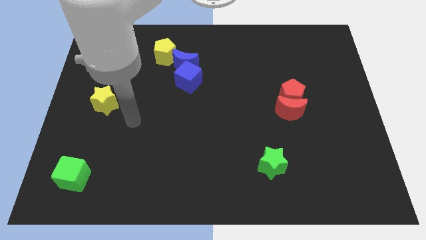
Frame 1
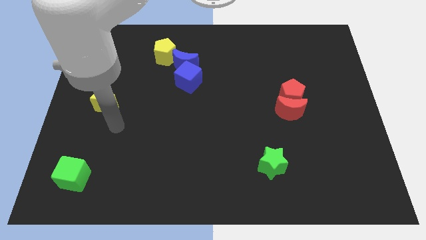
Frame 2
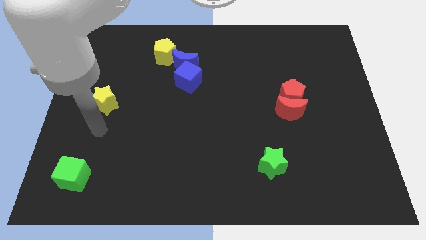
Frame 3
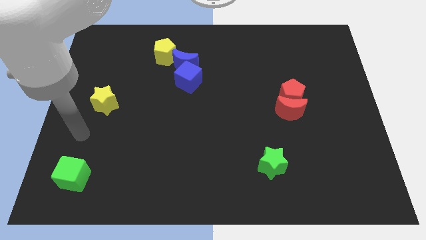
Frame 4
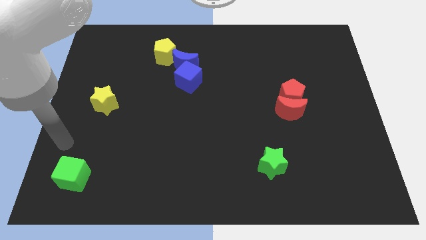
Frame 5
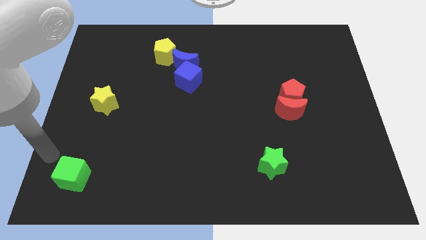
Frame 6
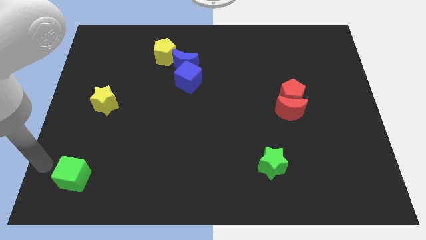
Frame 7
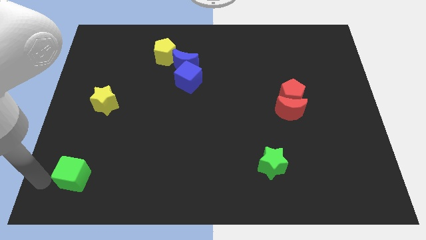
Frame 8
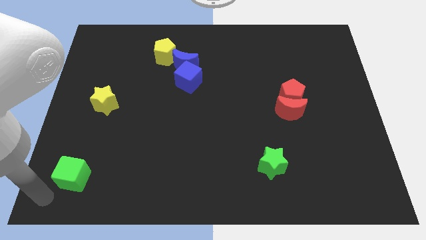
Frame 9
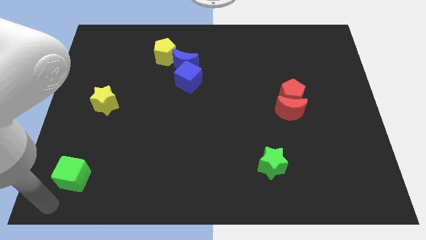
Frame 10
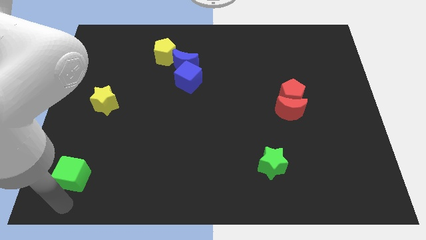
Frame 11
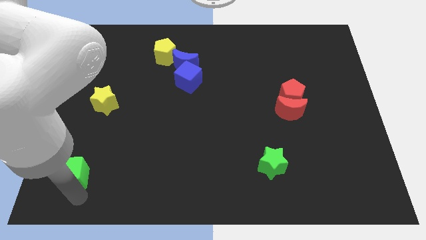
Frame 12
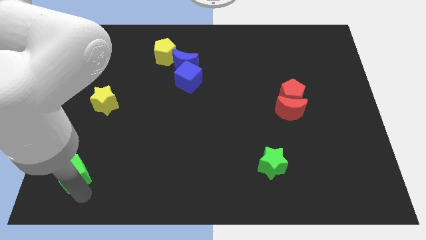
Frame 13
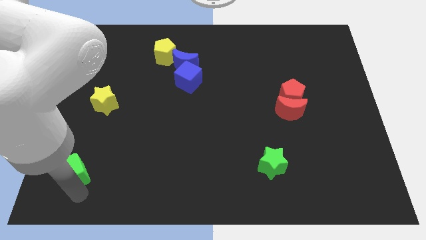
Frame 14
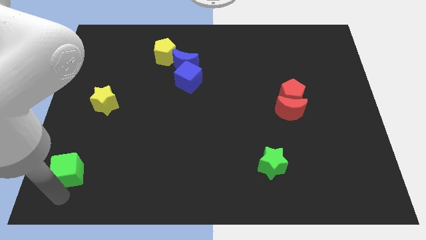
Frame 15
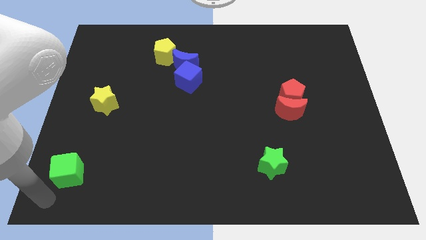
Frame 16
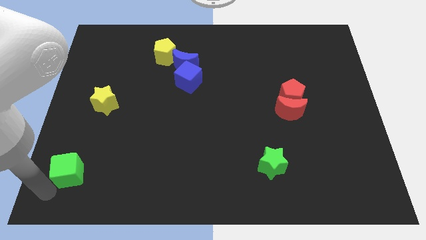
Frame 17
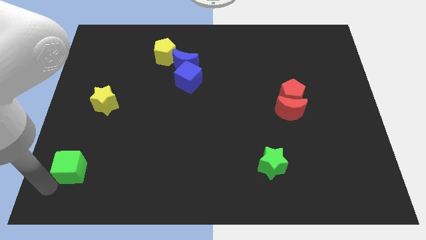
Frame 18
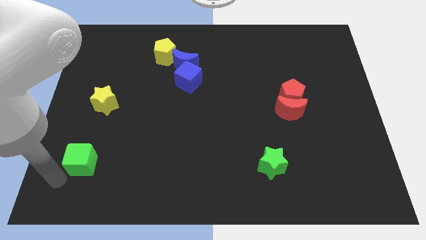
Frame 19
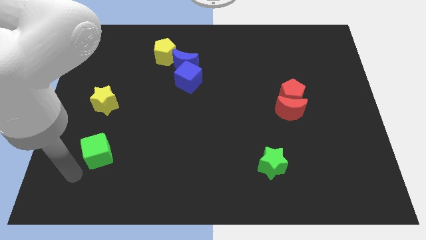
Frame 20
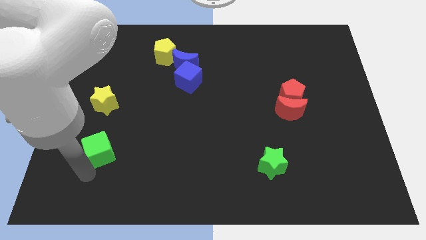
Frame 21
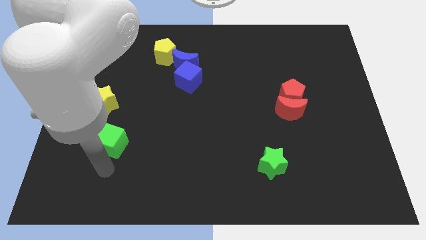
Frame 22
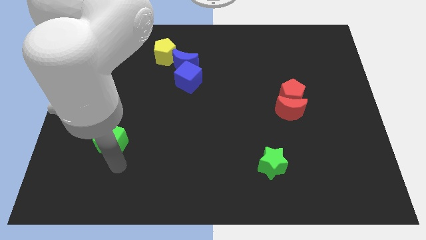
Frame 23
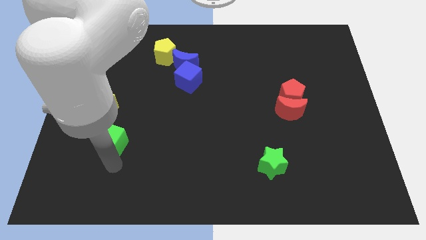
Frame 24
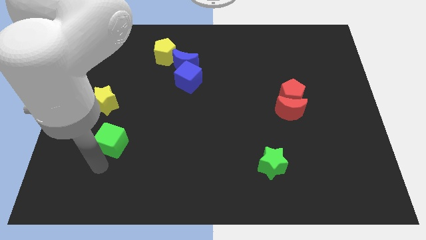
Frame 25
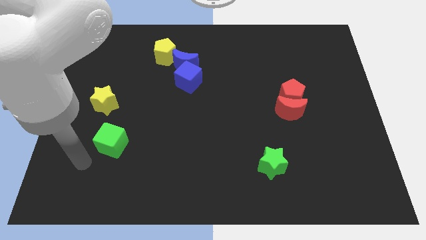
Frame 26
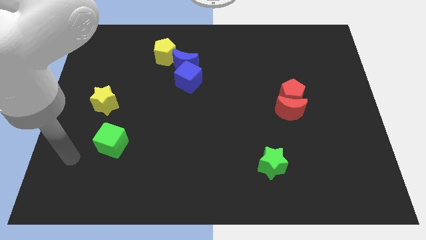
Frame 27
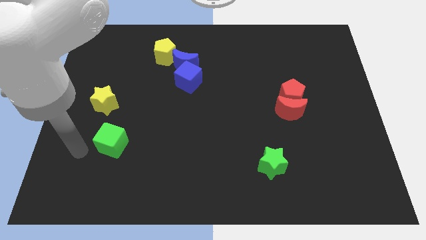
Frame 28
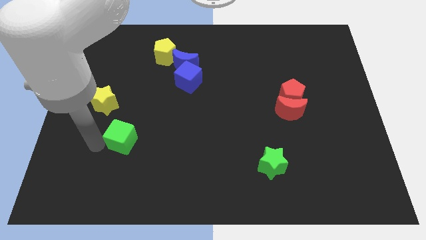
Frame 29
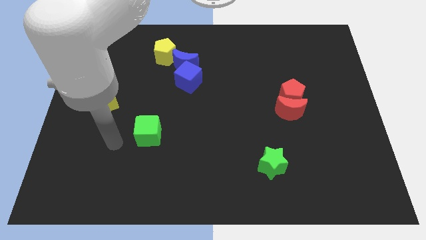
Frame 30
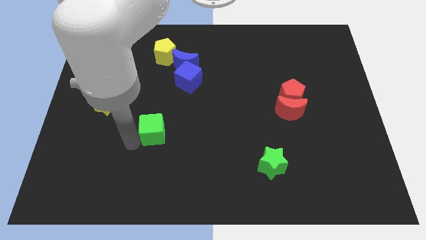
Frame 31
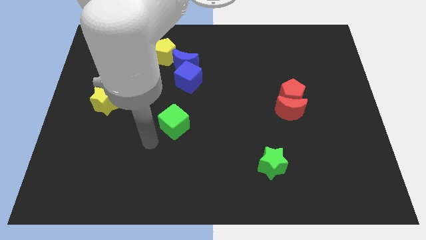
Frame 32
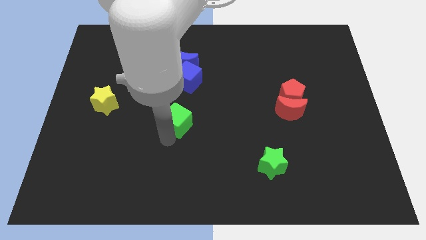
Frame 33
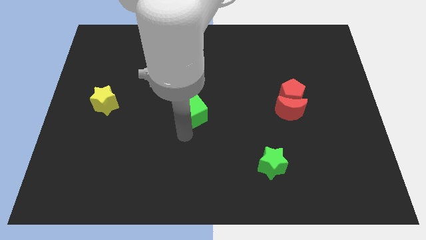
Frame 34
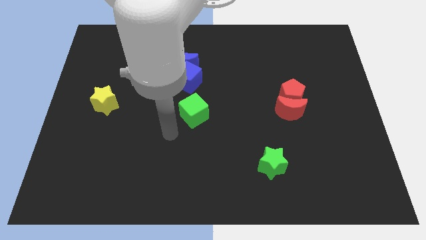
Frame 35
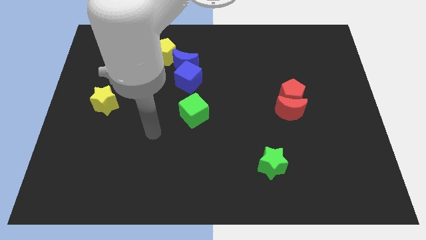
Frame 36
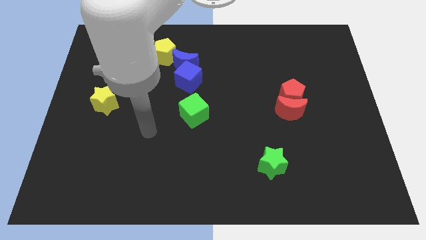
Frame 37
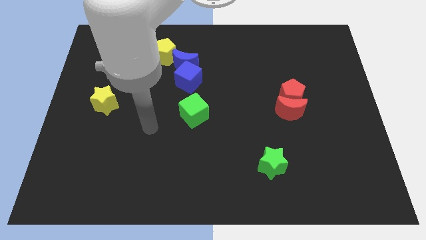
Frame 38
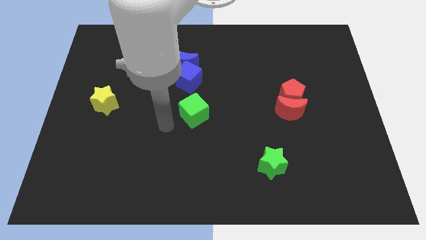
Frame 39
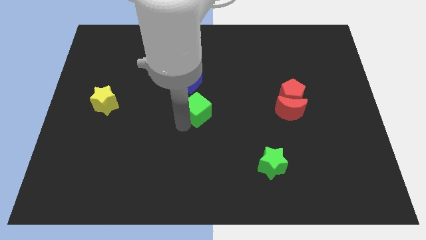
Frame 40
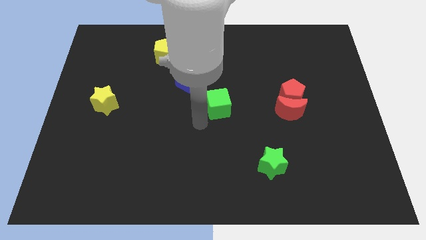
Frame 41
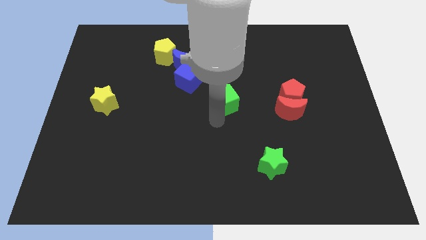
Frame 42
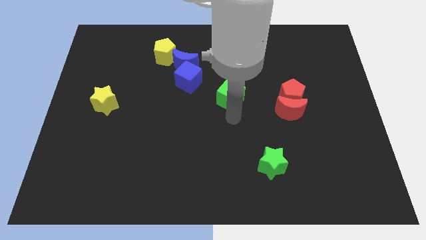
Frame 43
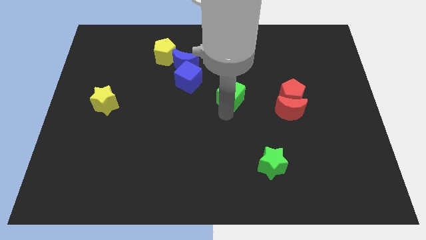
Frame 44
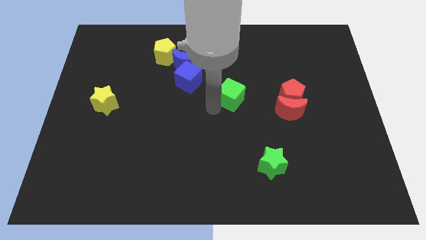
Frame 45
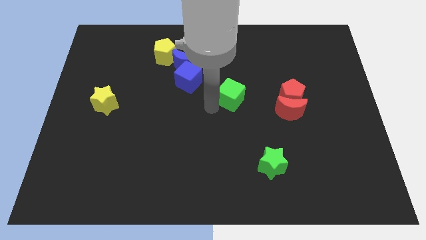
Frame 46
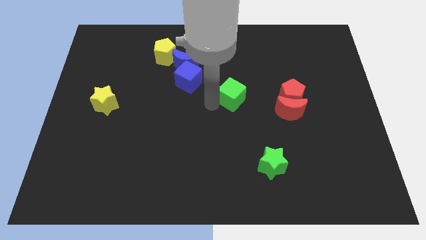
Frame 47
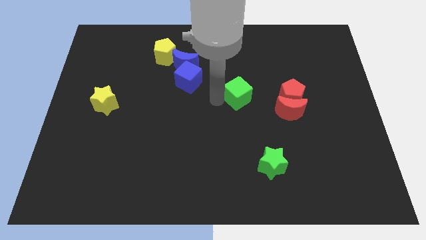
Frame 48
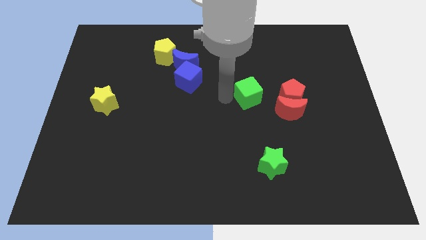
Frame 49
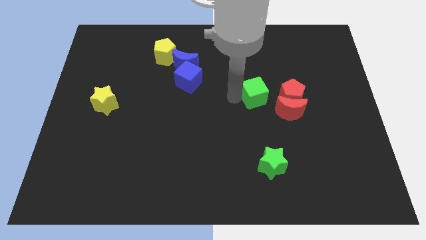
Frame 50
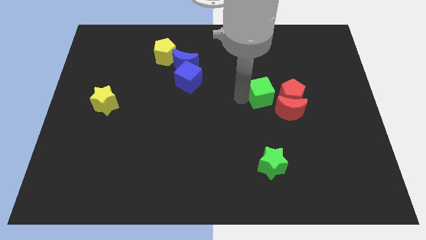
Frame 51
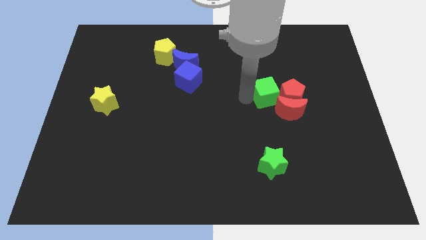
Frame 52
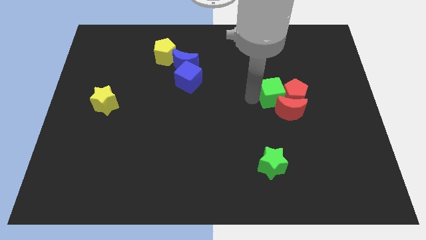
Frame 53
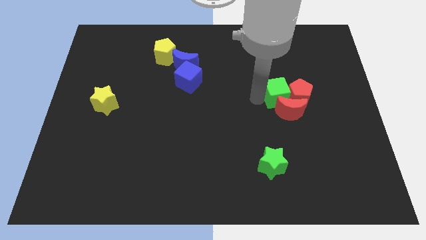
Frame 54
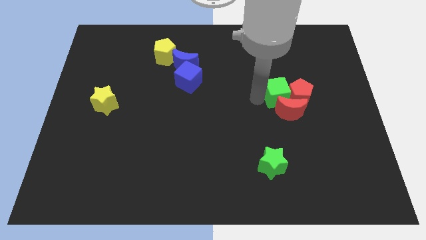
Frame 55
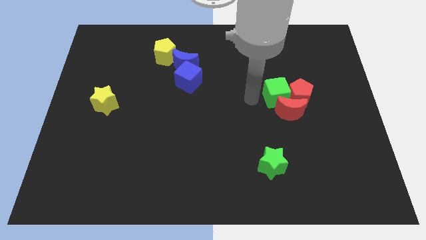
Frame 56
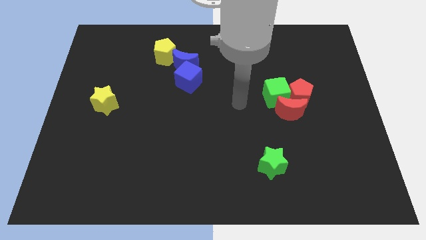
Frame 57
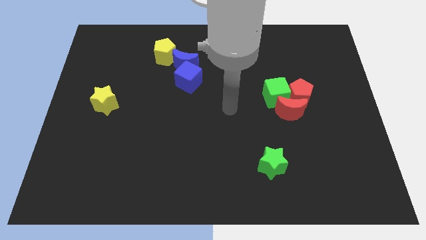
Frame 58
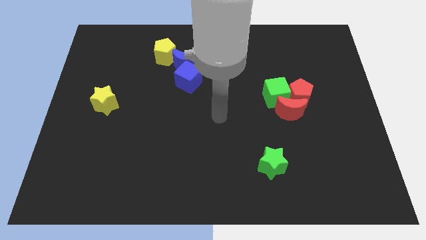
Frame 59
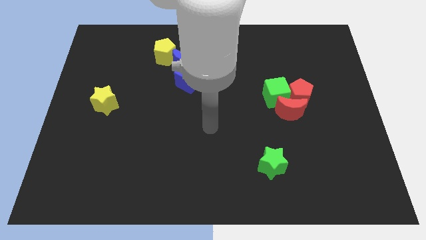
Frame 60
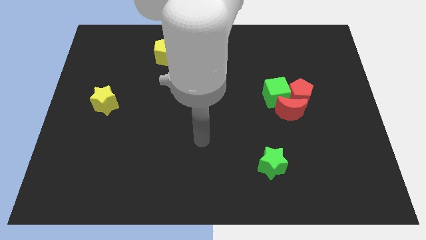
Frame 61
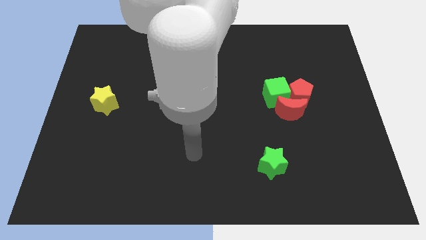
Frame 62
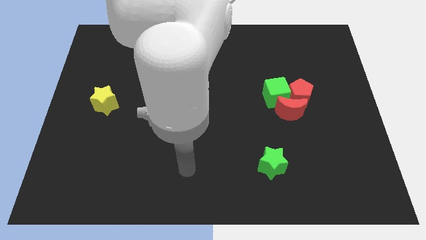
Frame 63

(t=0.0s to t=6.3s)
push the green cube into the red pentagon

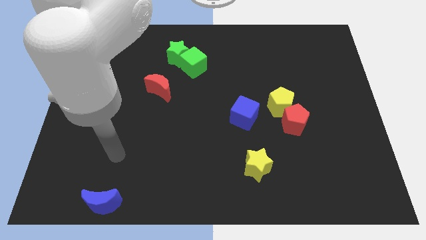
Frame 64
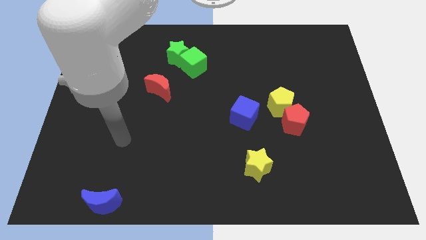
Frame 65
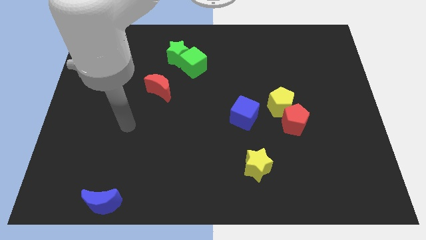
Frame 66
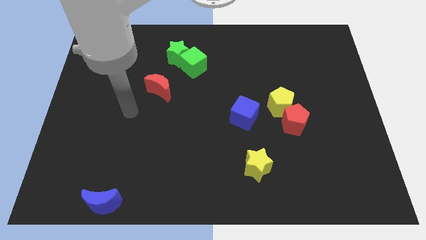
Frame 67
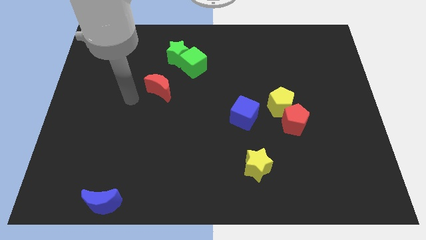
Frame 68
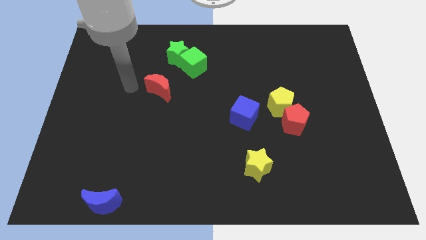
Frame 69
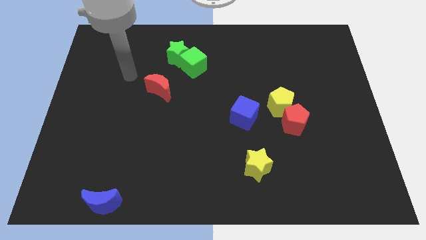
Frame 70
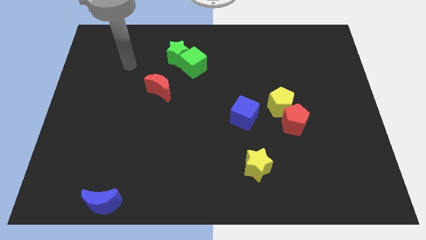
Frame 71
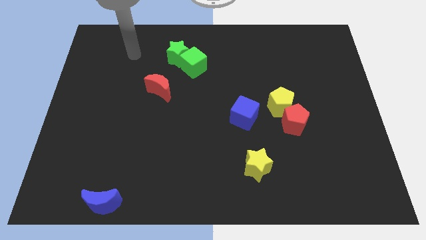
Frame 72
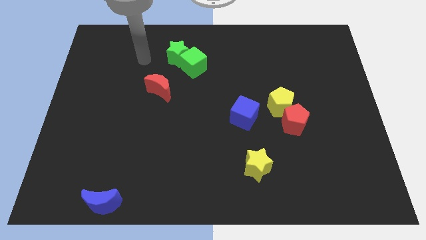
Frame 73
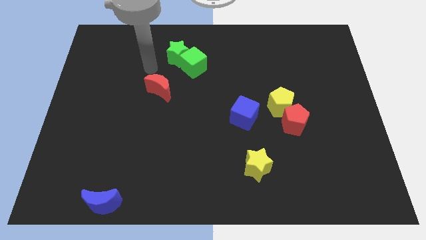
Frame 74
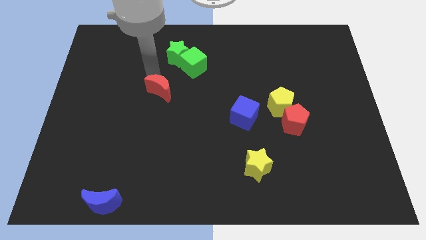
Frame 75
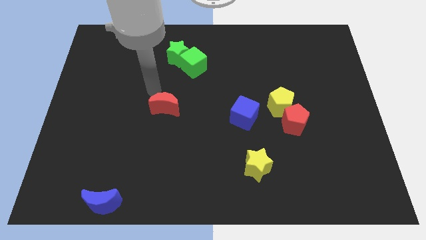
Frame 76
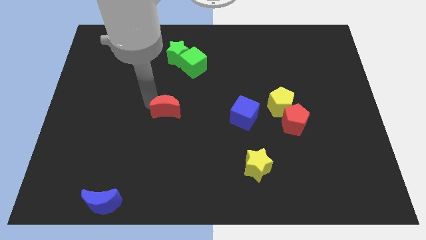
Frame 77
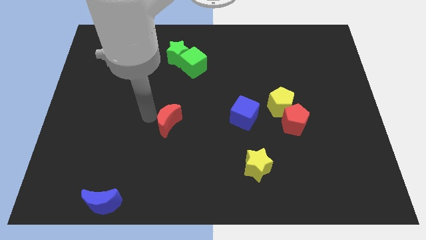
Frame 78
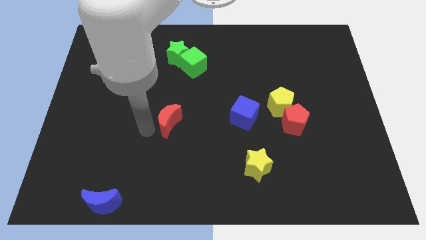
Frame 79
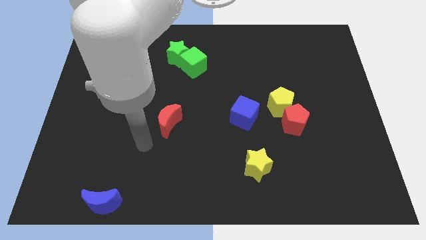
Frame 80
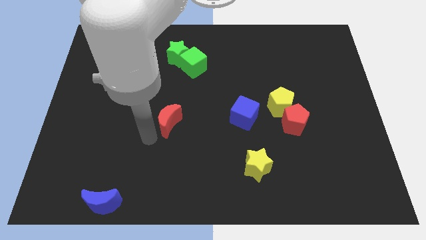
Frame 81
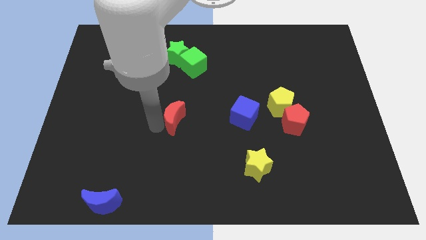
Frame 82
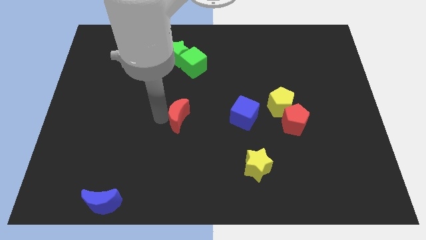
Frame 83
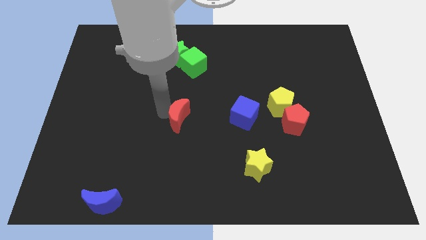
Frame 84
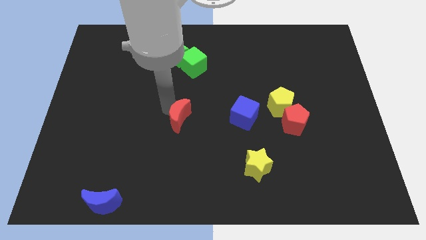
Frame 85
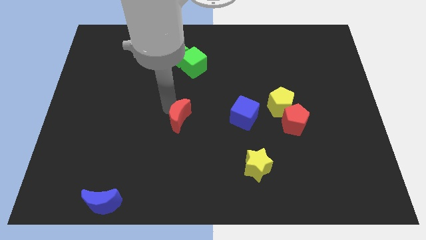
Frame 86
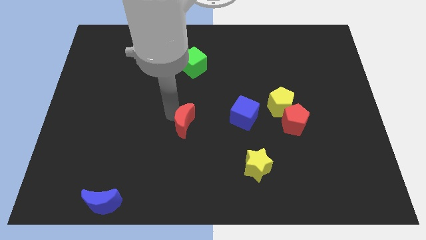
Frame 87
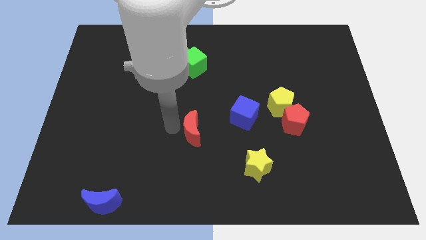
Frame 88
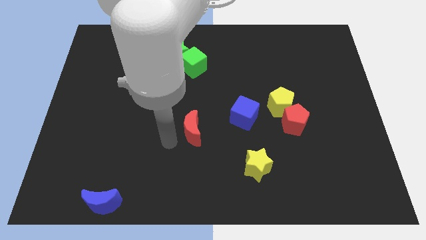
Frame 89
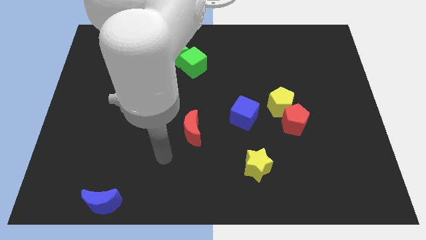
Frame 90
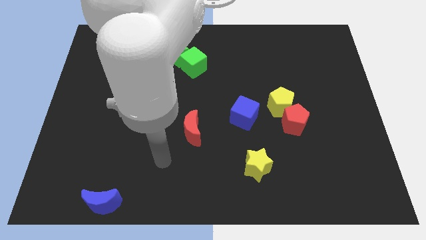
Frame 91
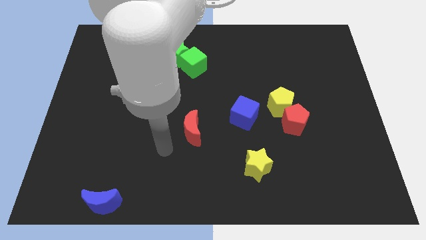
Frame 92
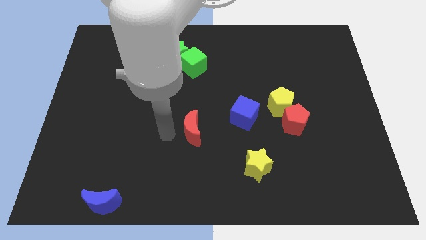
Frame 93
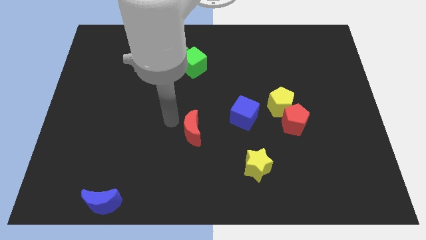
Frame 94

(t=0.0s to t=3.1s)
move the red crescent to the left of the blue cube
